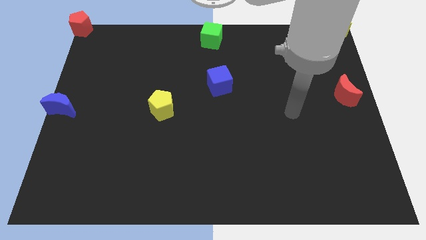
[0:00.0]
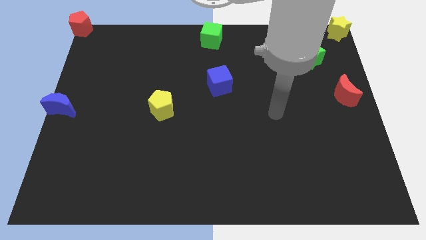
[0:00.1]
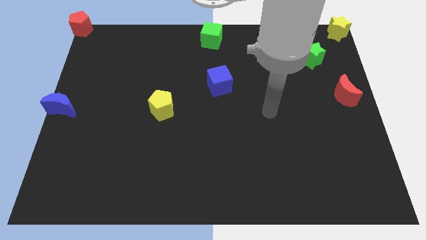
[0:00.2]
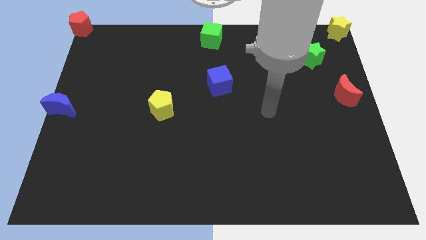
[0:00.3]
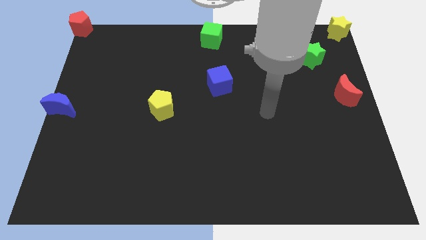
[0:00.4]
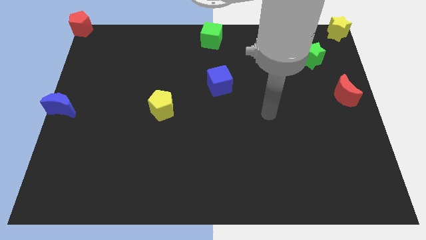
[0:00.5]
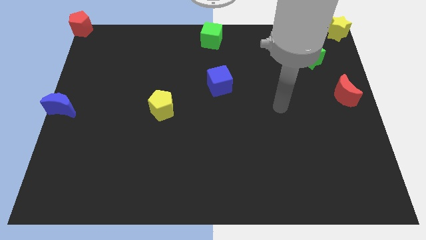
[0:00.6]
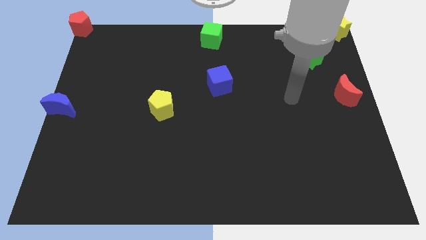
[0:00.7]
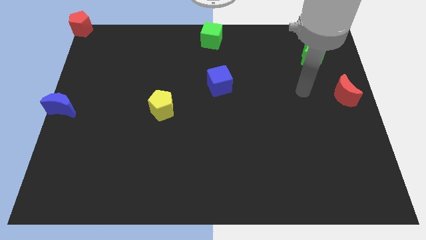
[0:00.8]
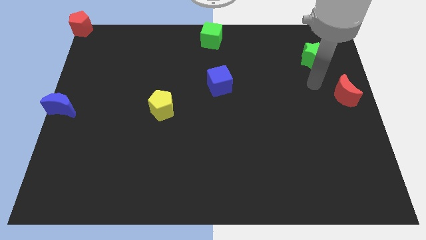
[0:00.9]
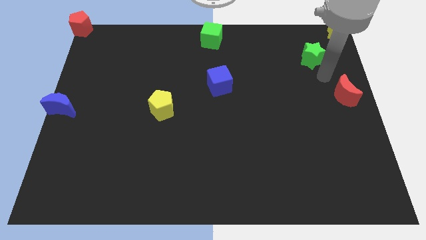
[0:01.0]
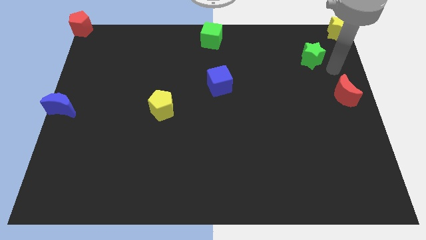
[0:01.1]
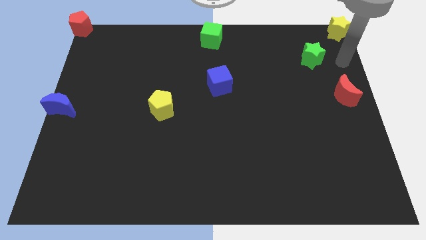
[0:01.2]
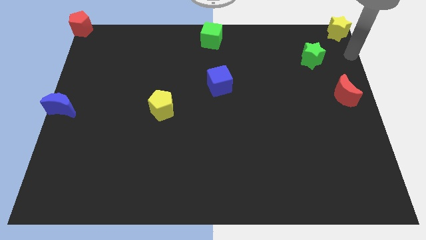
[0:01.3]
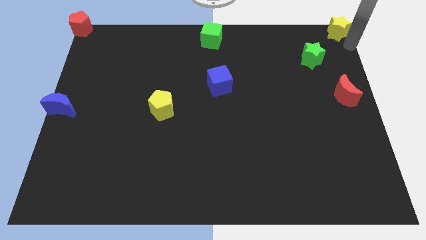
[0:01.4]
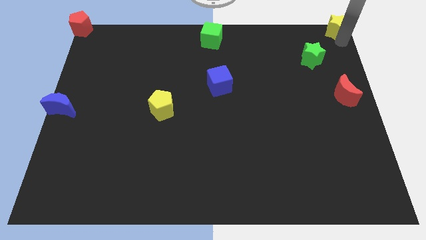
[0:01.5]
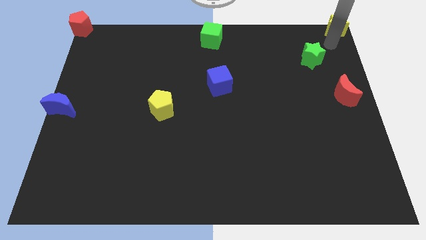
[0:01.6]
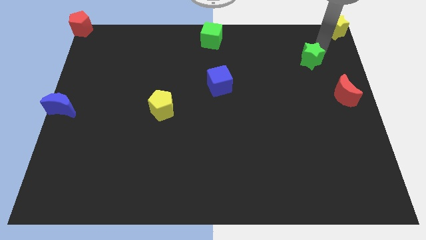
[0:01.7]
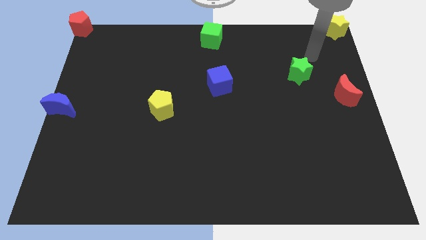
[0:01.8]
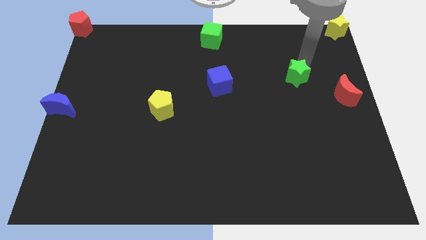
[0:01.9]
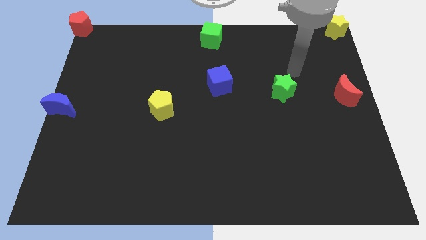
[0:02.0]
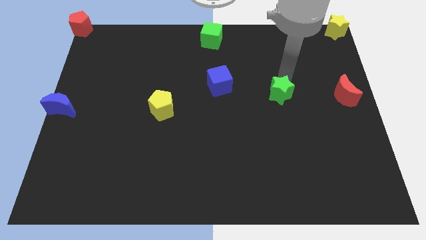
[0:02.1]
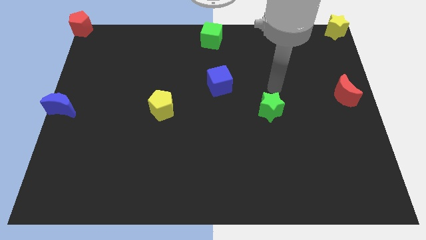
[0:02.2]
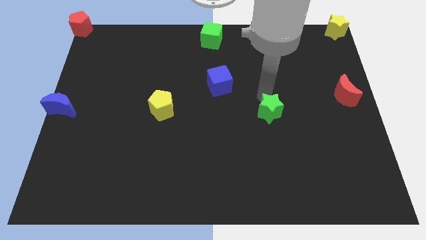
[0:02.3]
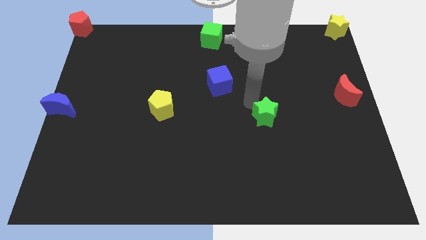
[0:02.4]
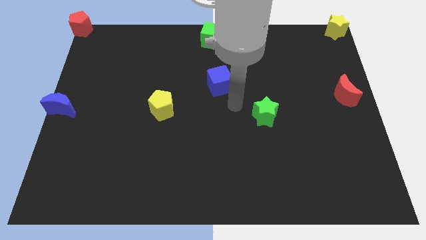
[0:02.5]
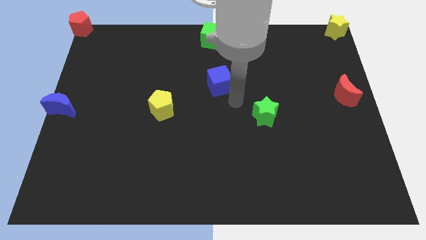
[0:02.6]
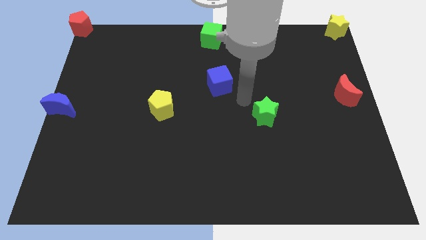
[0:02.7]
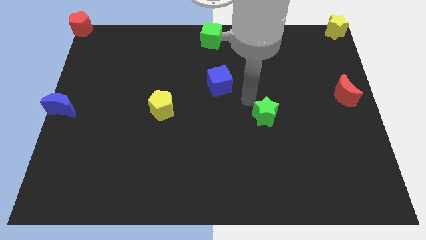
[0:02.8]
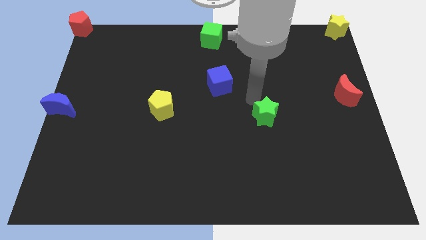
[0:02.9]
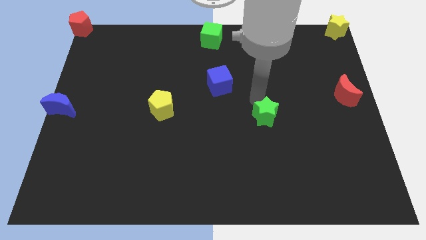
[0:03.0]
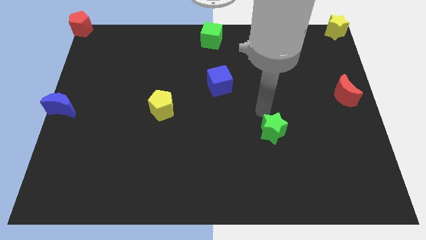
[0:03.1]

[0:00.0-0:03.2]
pull the green star at the bottom right of the blue cube

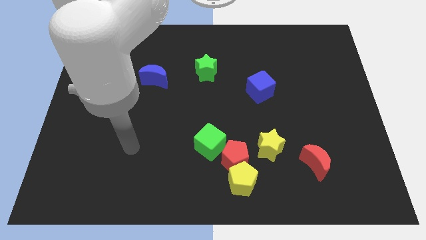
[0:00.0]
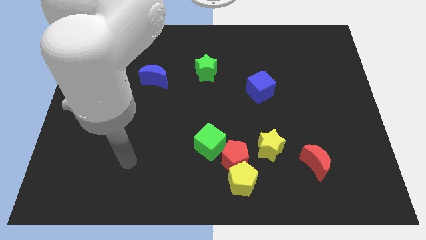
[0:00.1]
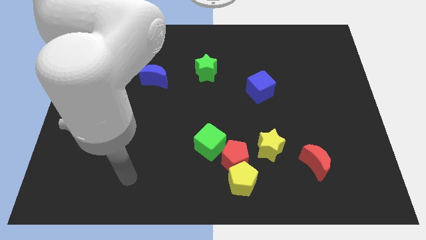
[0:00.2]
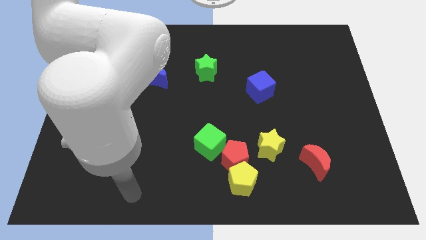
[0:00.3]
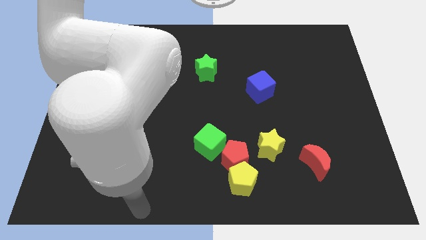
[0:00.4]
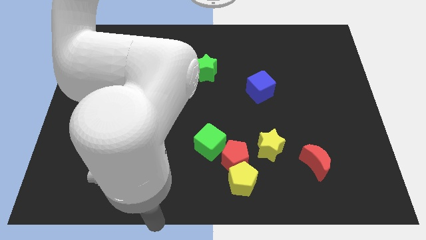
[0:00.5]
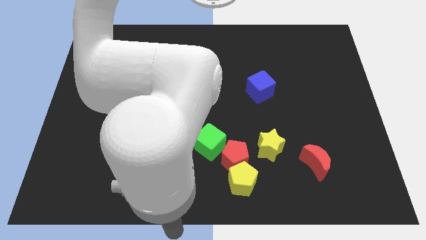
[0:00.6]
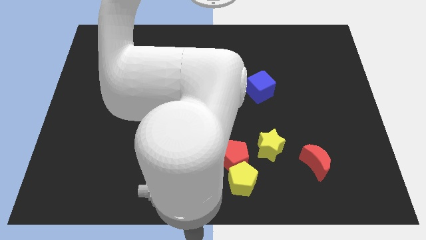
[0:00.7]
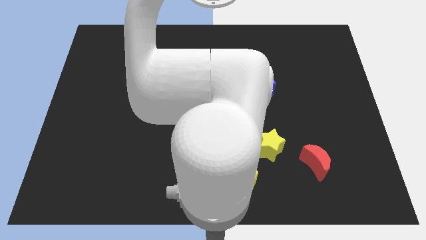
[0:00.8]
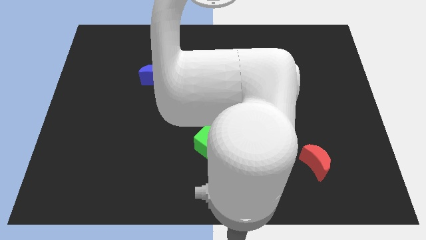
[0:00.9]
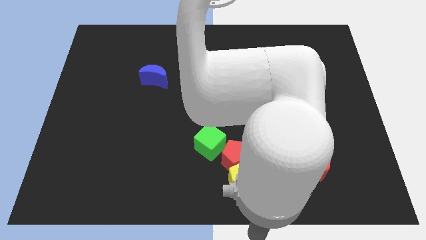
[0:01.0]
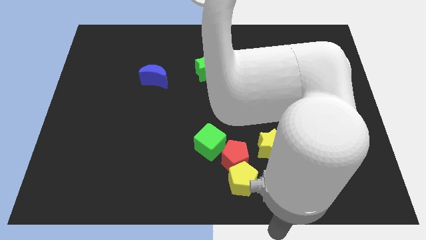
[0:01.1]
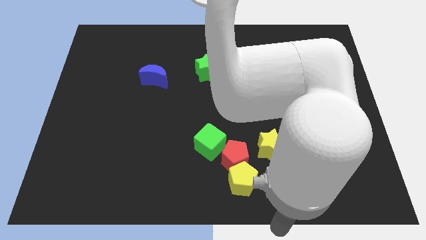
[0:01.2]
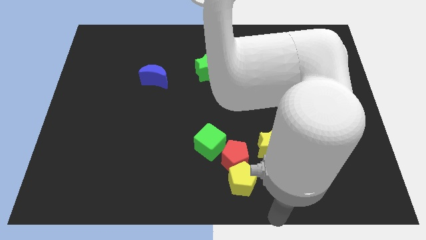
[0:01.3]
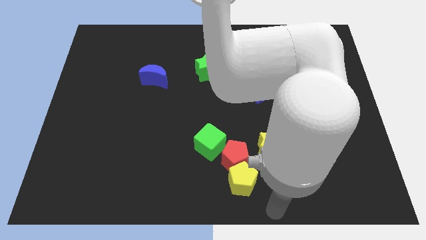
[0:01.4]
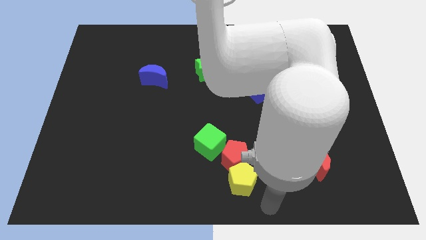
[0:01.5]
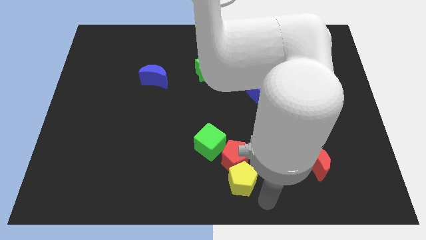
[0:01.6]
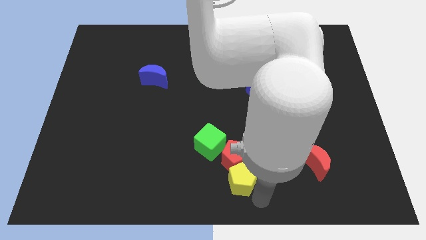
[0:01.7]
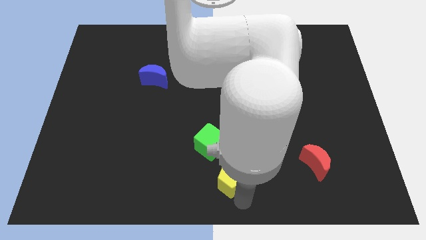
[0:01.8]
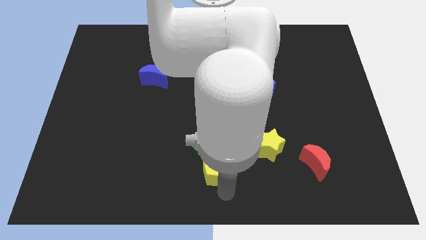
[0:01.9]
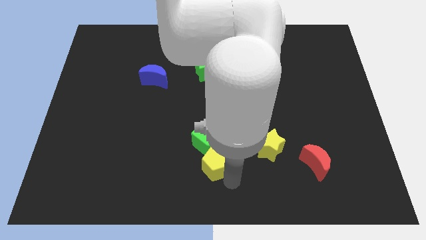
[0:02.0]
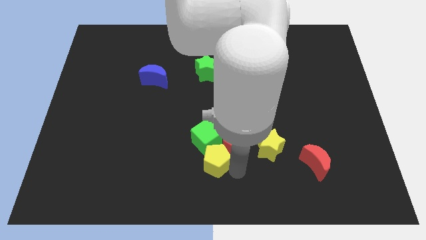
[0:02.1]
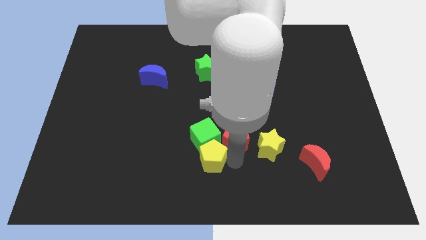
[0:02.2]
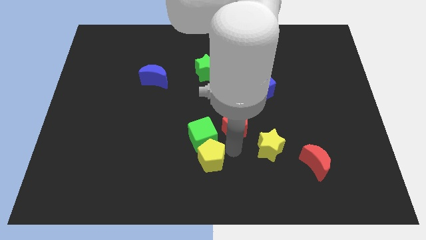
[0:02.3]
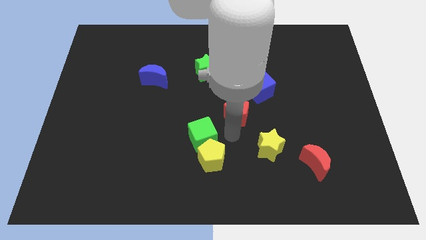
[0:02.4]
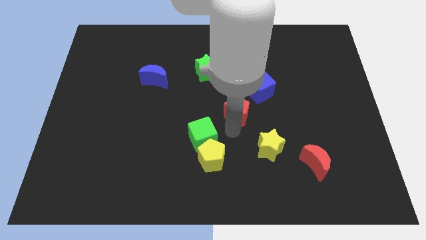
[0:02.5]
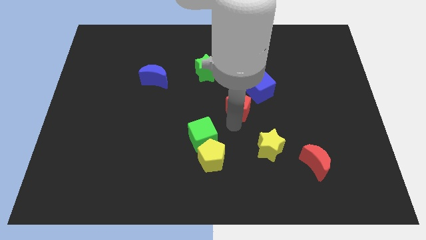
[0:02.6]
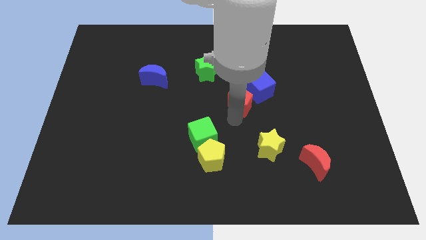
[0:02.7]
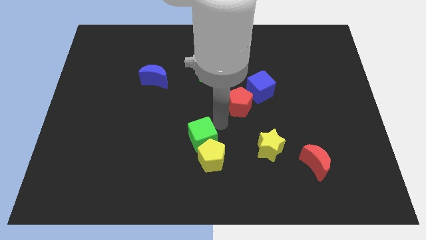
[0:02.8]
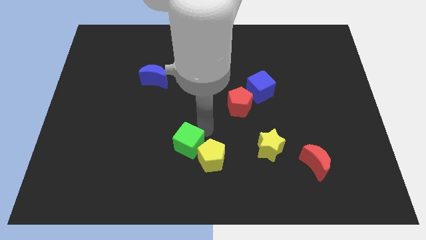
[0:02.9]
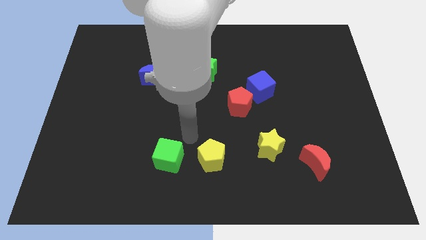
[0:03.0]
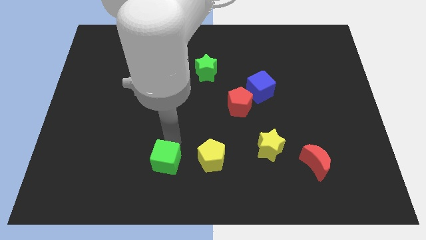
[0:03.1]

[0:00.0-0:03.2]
separate group of blocks from each other

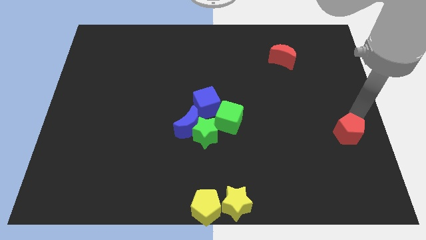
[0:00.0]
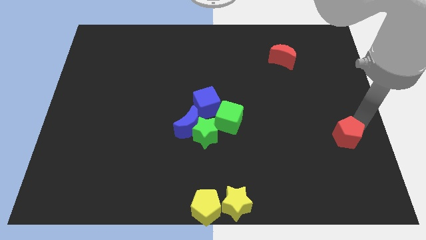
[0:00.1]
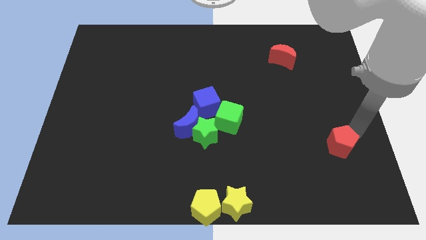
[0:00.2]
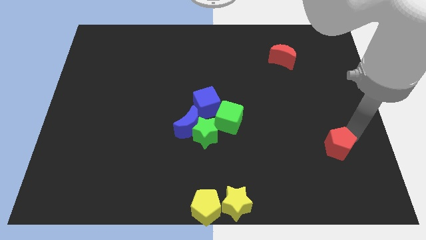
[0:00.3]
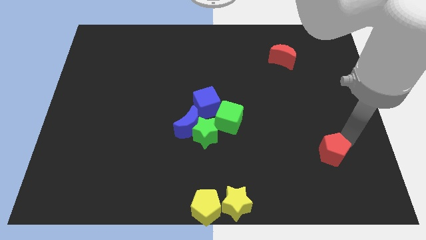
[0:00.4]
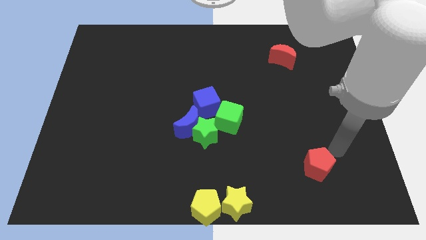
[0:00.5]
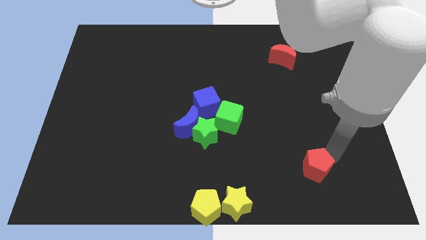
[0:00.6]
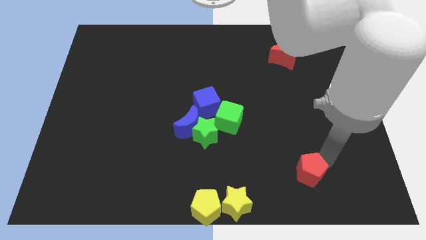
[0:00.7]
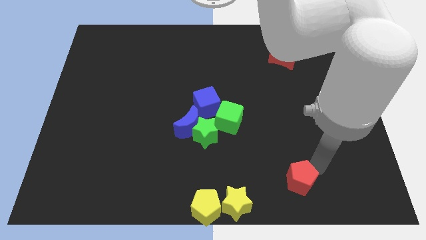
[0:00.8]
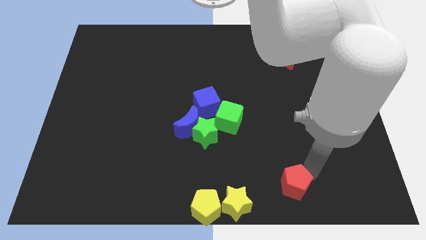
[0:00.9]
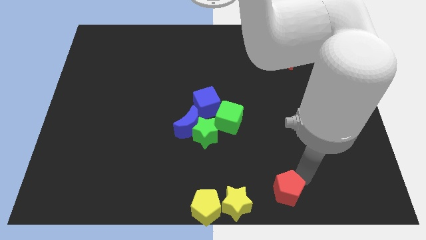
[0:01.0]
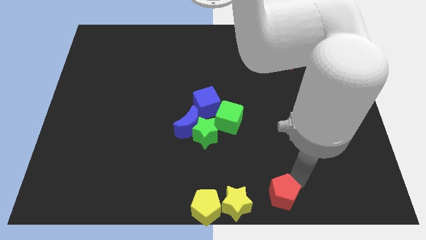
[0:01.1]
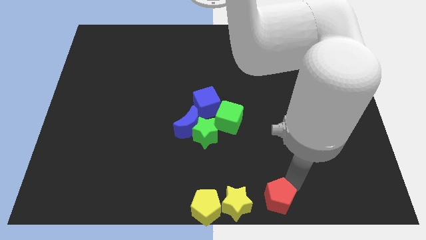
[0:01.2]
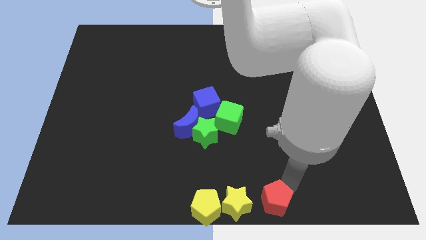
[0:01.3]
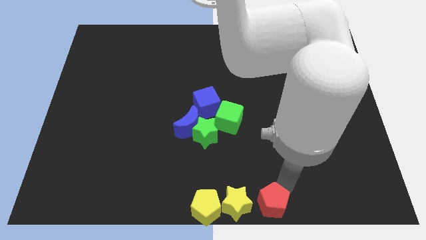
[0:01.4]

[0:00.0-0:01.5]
push the red pentagon to the right of the yellow star

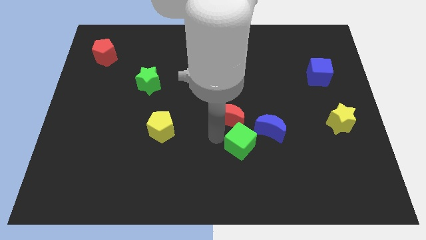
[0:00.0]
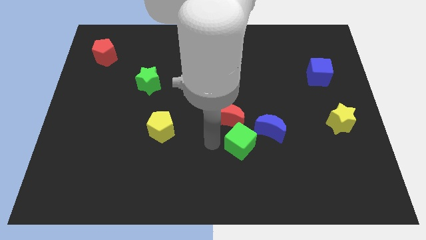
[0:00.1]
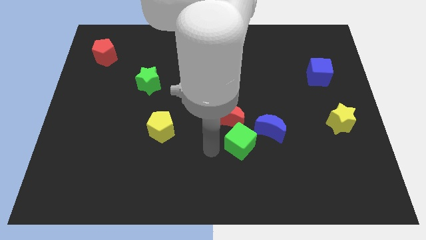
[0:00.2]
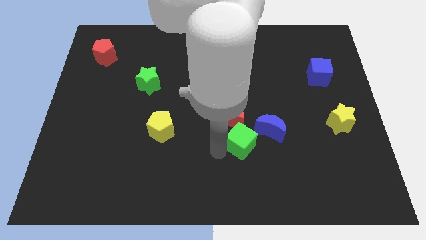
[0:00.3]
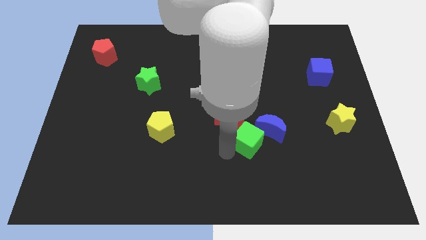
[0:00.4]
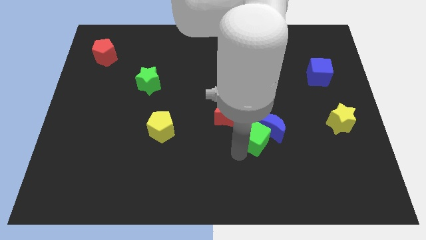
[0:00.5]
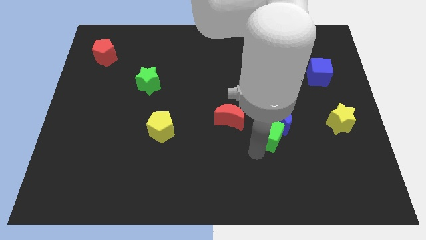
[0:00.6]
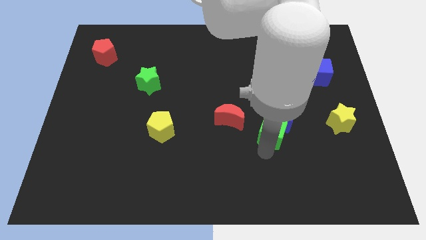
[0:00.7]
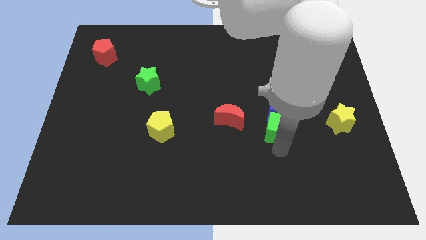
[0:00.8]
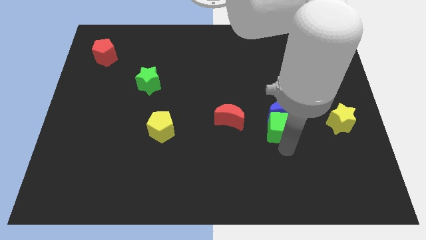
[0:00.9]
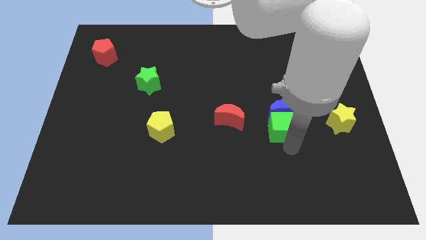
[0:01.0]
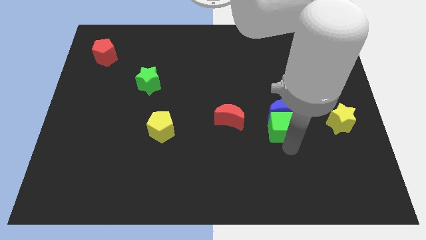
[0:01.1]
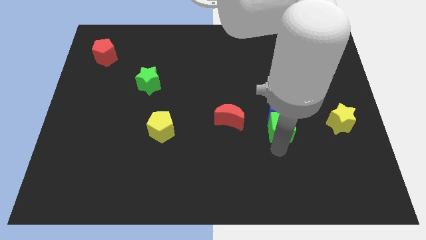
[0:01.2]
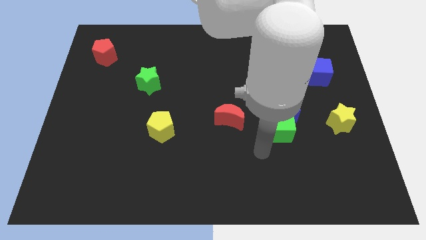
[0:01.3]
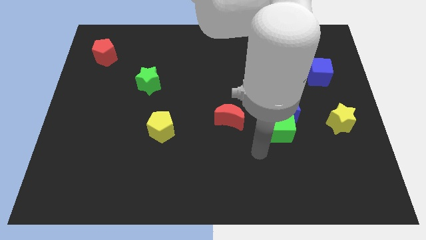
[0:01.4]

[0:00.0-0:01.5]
push the green cube into the blue crescent
